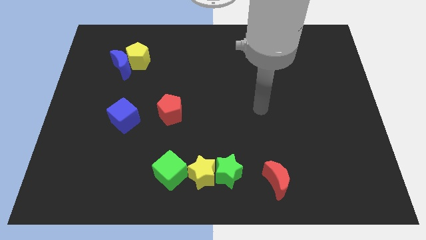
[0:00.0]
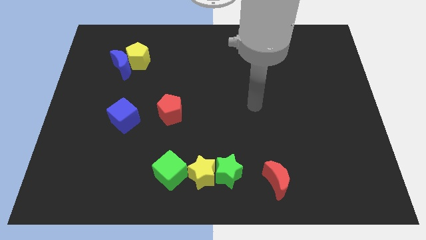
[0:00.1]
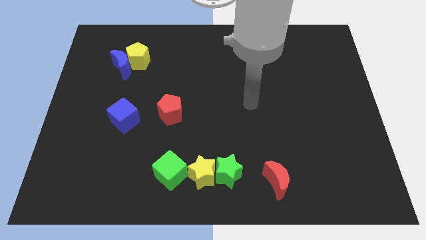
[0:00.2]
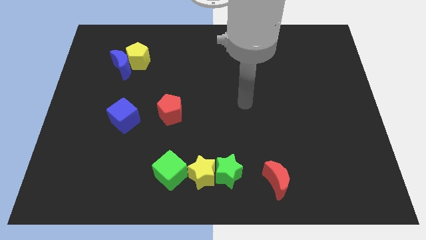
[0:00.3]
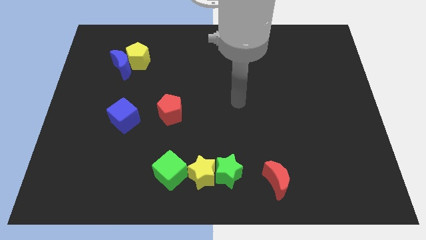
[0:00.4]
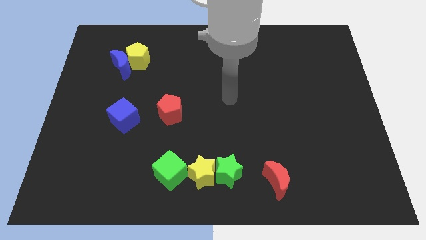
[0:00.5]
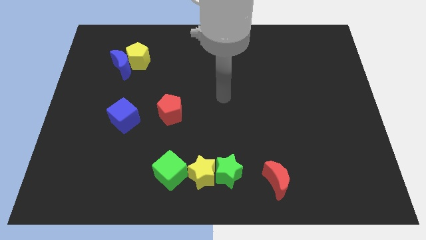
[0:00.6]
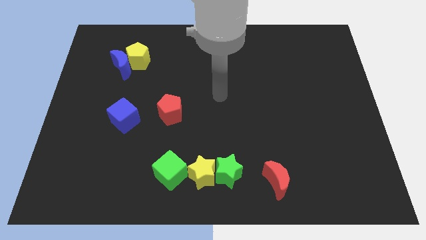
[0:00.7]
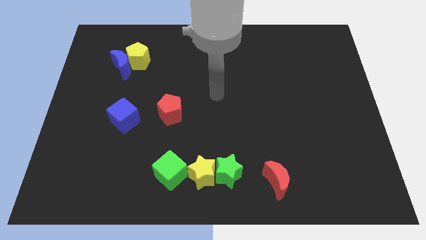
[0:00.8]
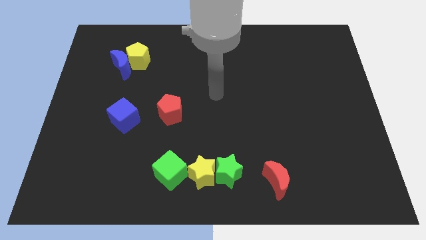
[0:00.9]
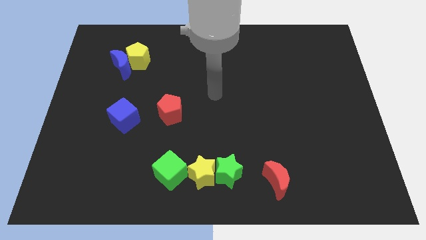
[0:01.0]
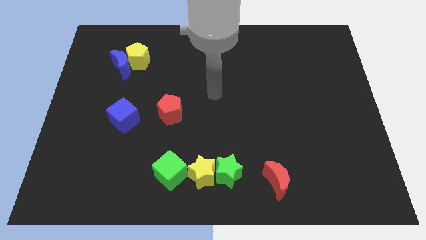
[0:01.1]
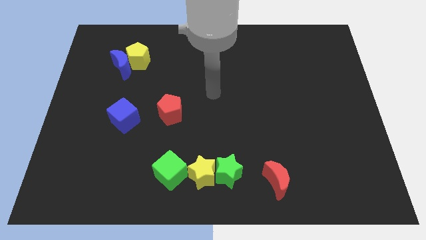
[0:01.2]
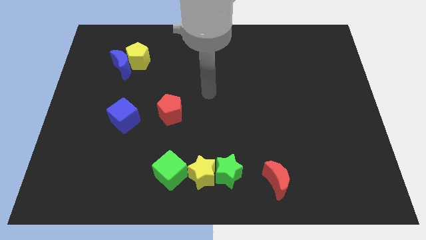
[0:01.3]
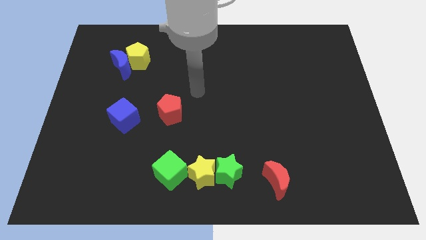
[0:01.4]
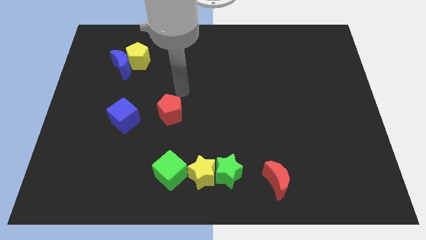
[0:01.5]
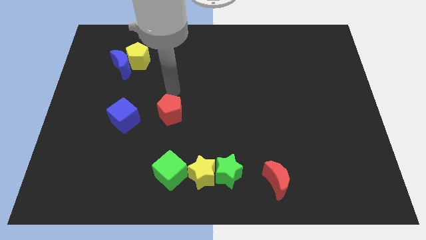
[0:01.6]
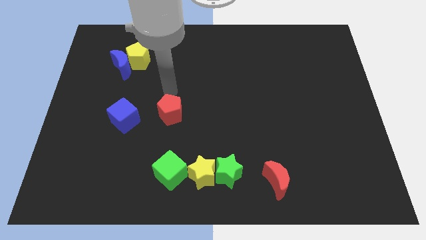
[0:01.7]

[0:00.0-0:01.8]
point the arm above the red pentagon

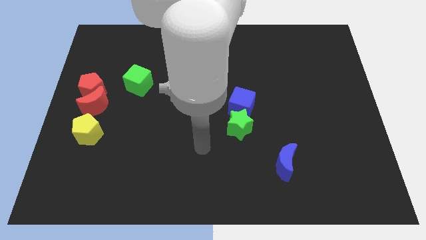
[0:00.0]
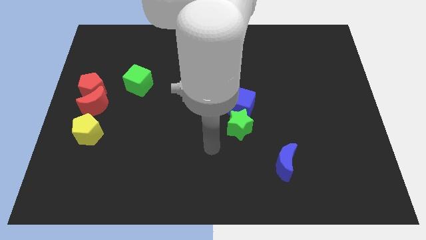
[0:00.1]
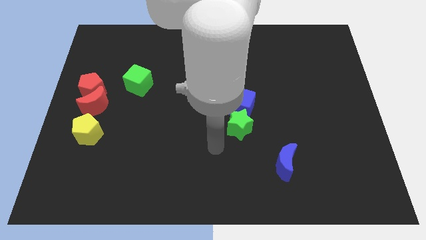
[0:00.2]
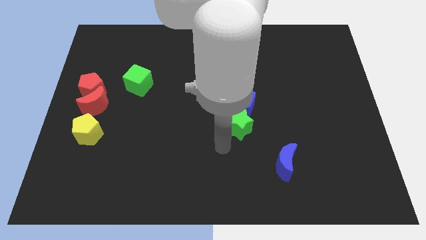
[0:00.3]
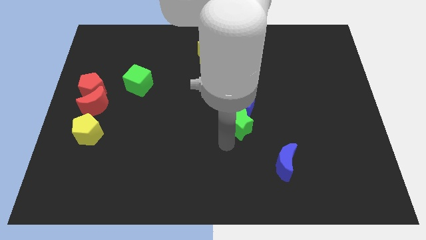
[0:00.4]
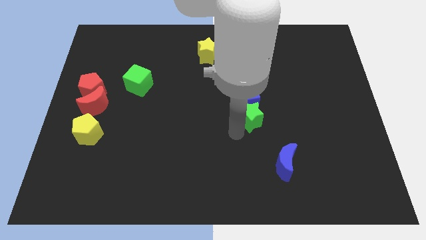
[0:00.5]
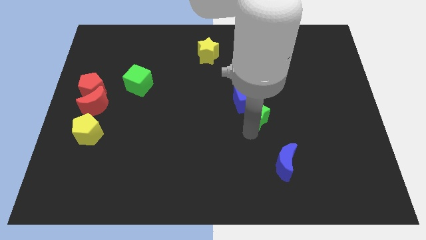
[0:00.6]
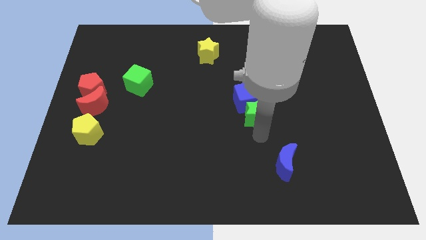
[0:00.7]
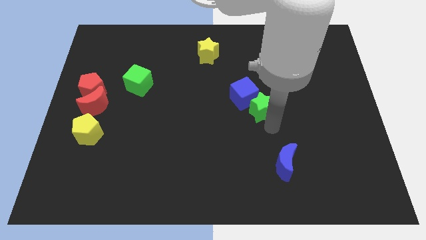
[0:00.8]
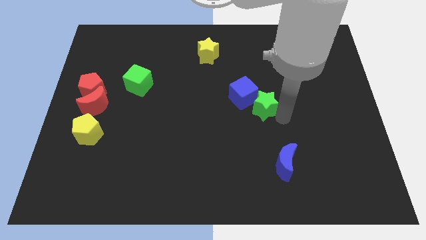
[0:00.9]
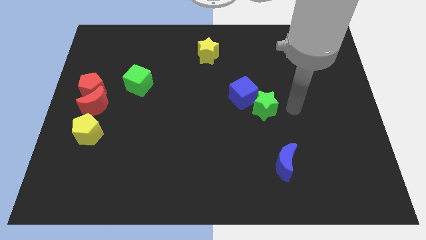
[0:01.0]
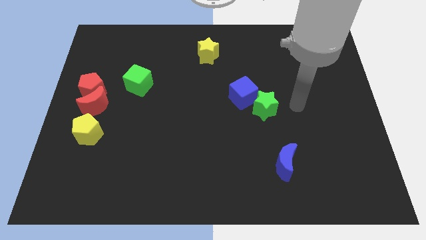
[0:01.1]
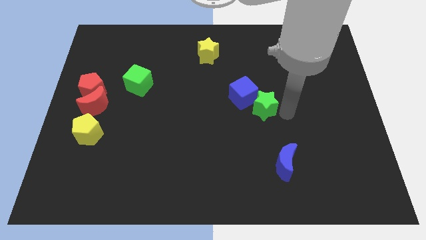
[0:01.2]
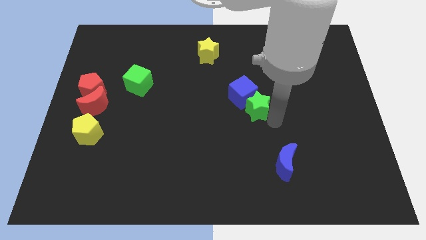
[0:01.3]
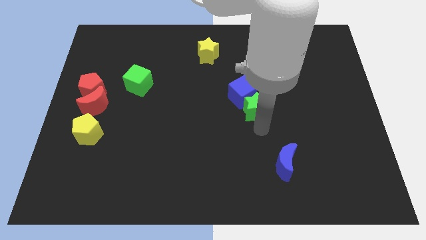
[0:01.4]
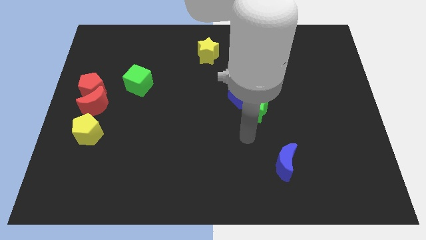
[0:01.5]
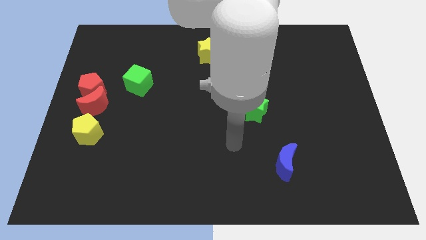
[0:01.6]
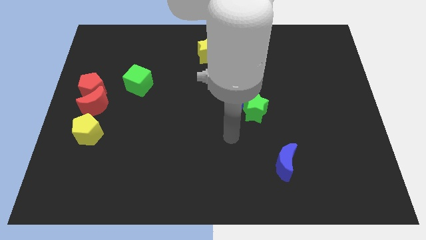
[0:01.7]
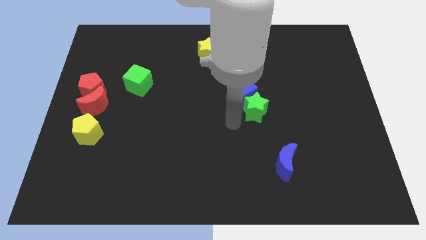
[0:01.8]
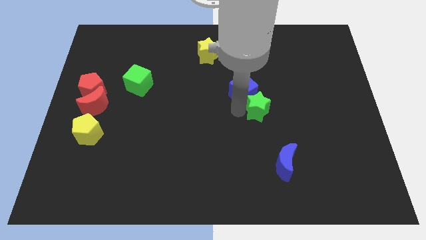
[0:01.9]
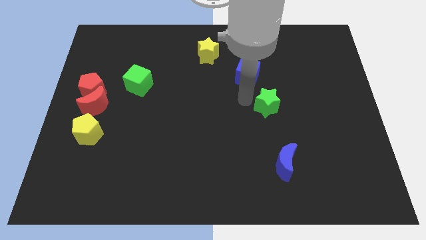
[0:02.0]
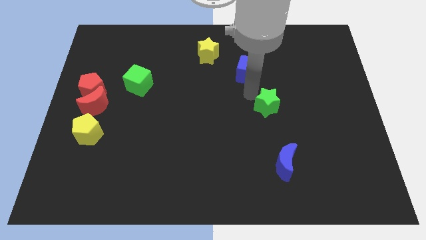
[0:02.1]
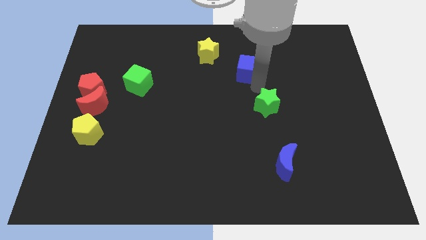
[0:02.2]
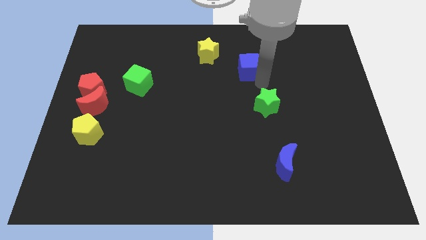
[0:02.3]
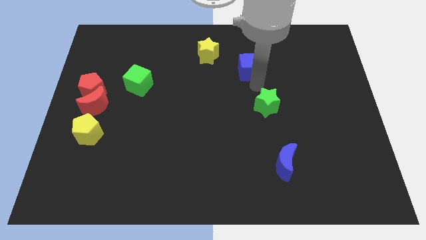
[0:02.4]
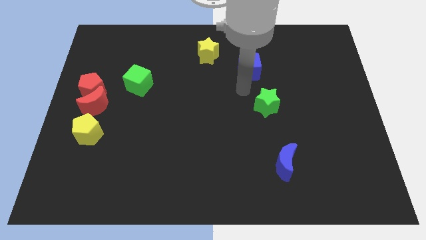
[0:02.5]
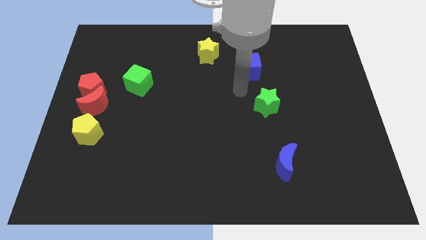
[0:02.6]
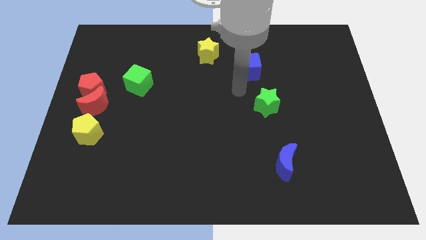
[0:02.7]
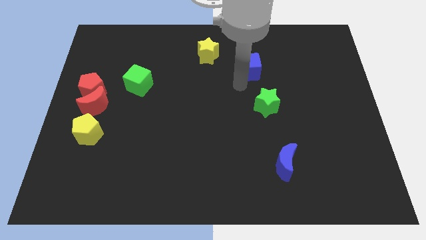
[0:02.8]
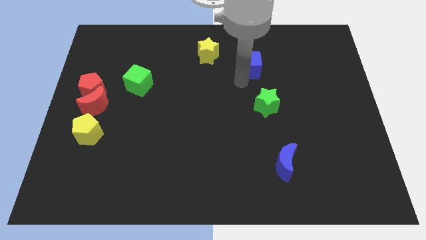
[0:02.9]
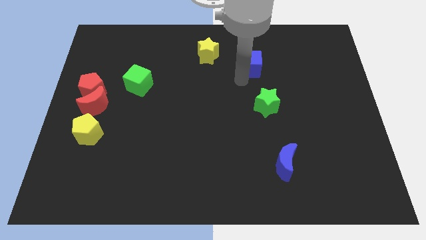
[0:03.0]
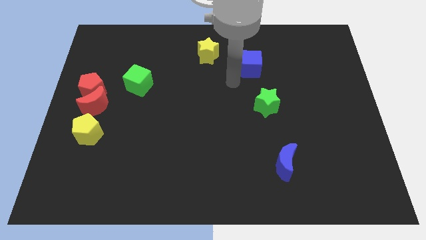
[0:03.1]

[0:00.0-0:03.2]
separate the green star and blue cube

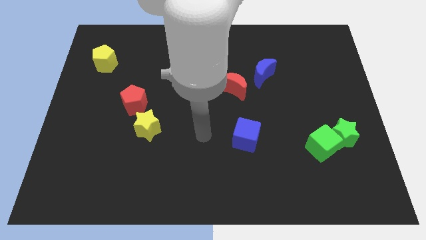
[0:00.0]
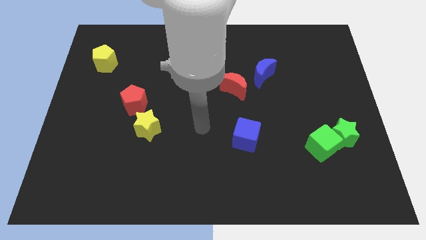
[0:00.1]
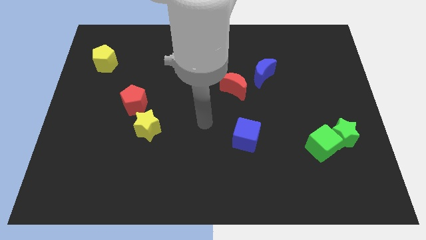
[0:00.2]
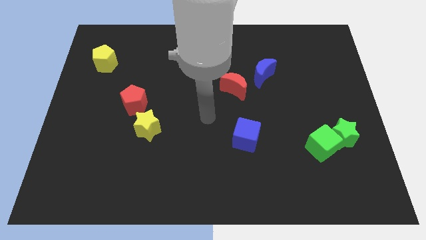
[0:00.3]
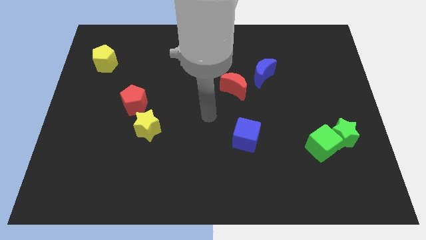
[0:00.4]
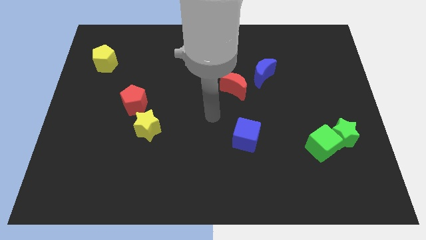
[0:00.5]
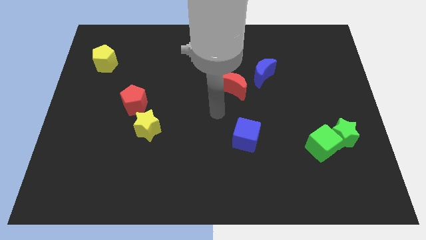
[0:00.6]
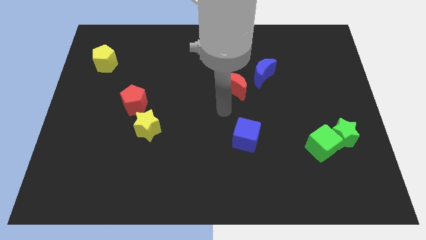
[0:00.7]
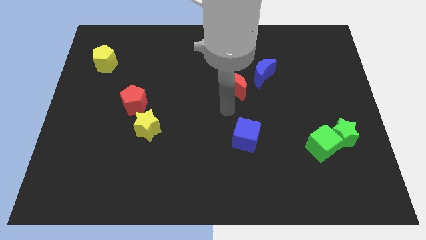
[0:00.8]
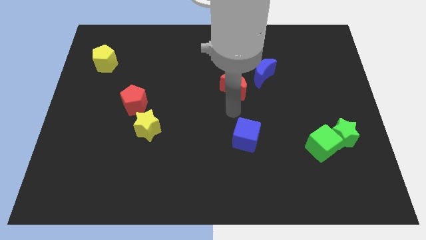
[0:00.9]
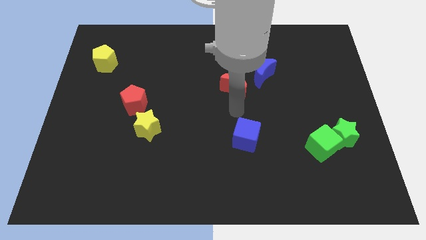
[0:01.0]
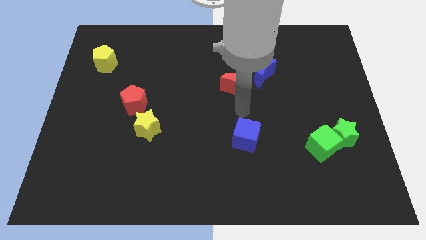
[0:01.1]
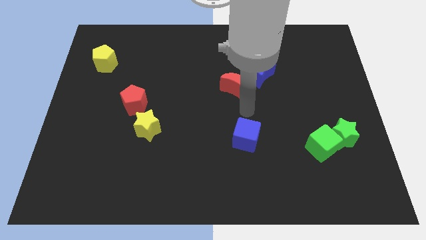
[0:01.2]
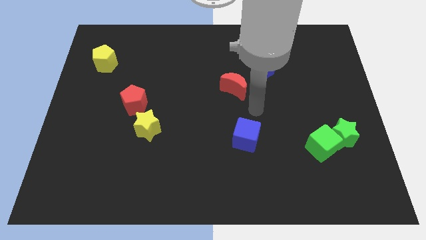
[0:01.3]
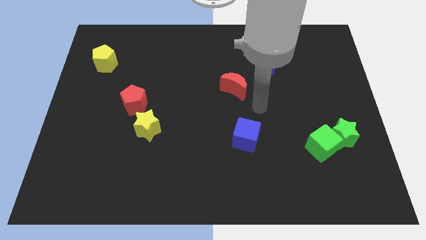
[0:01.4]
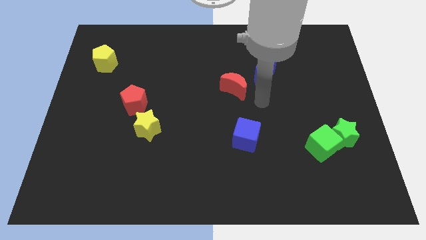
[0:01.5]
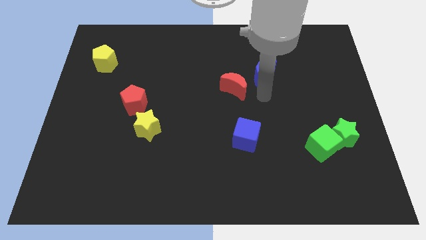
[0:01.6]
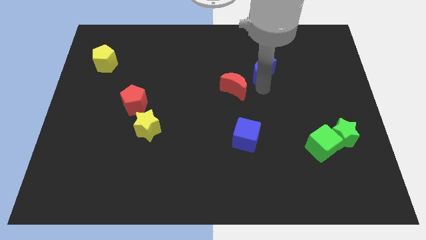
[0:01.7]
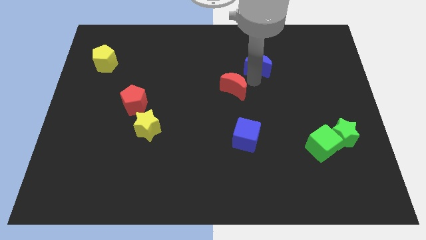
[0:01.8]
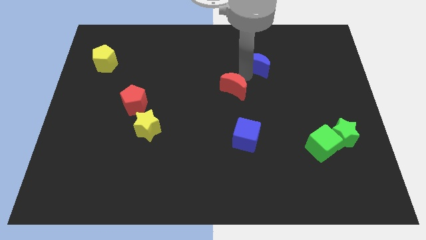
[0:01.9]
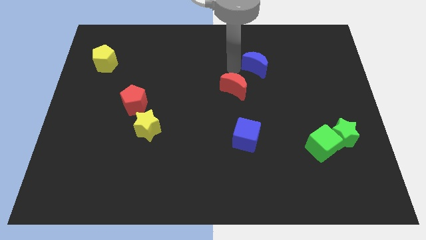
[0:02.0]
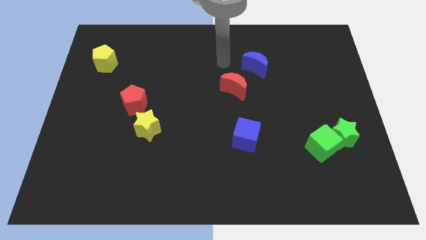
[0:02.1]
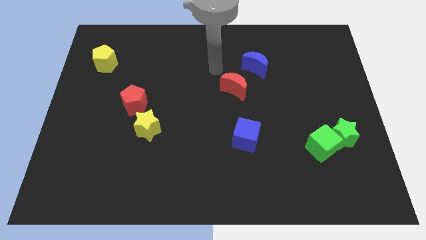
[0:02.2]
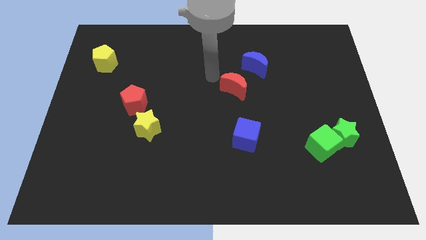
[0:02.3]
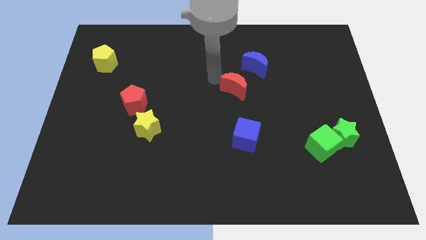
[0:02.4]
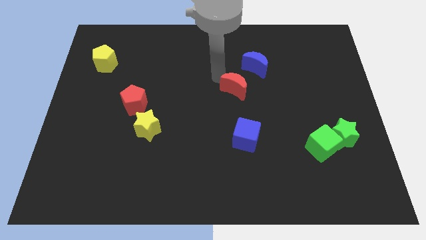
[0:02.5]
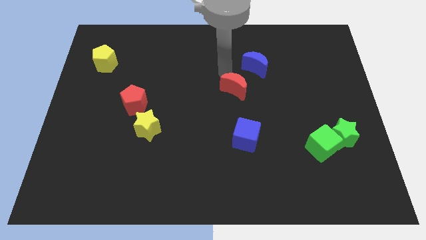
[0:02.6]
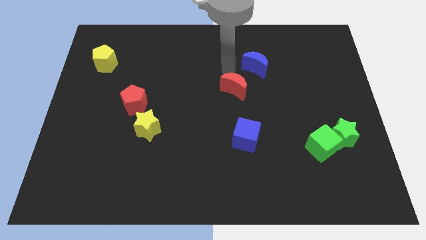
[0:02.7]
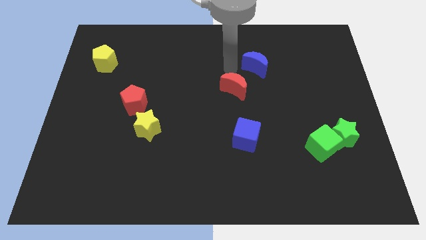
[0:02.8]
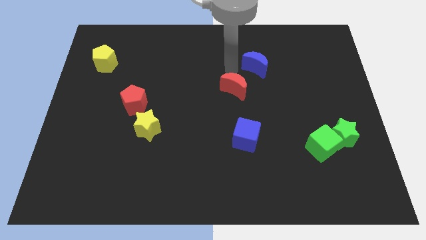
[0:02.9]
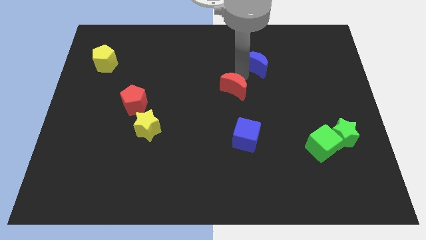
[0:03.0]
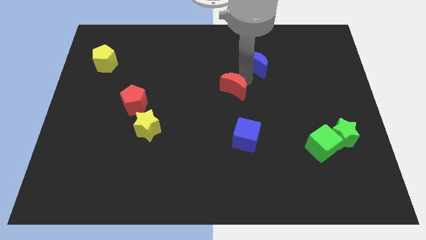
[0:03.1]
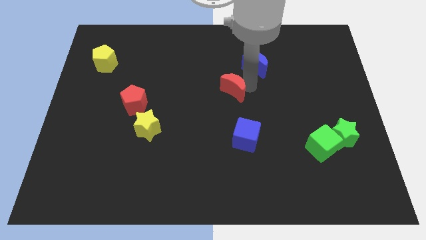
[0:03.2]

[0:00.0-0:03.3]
move the blue moon slightly downwards

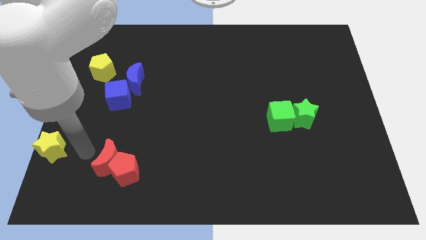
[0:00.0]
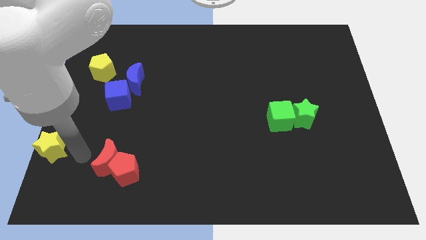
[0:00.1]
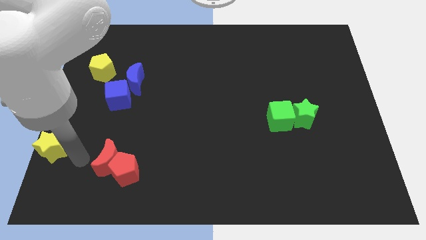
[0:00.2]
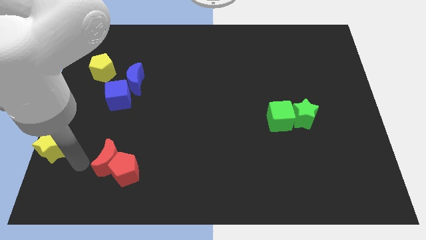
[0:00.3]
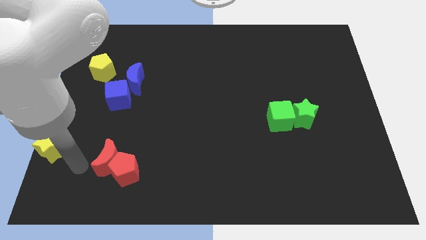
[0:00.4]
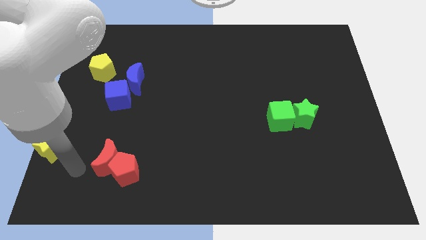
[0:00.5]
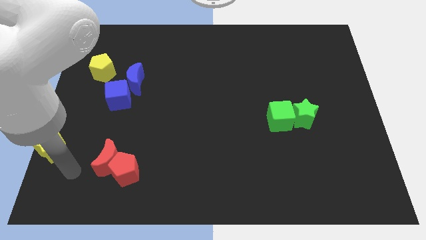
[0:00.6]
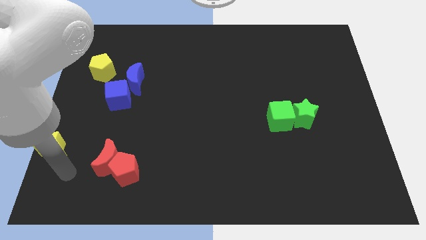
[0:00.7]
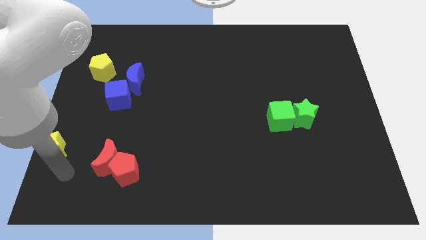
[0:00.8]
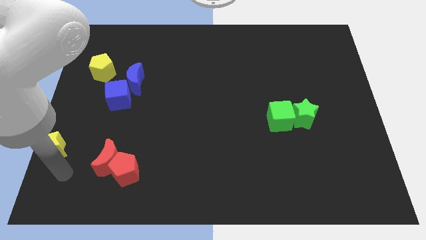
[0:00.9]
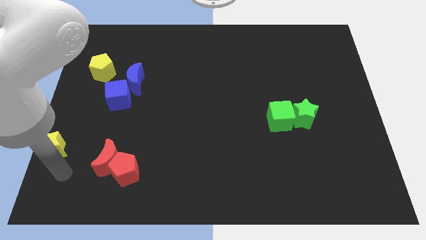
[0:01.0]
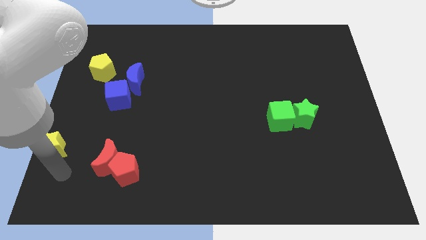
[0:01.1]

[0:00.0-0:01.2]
move the arm to the bottom of the yellow star
